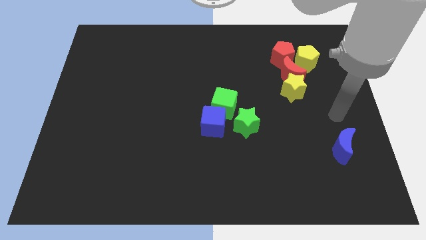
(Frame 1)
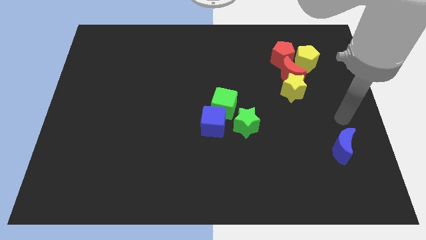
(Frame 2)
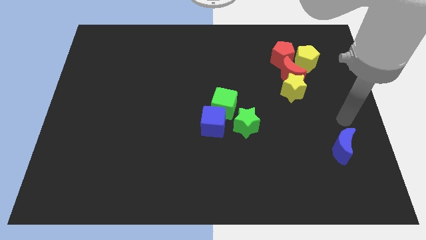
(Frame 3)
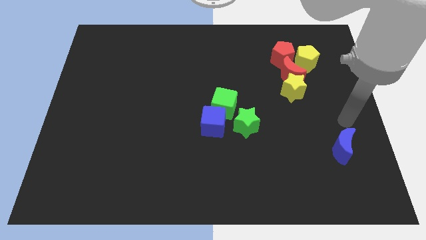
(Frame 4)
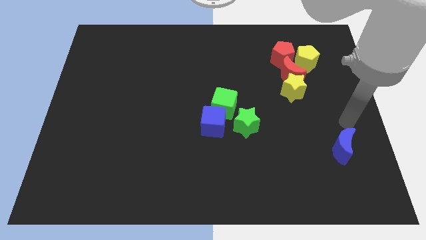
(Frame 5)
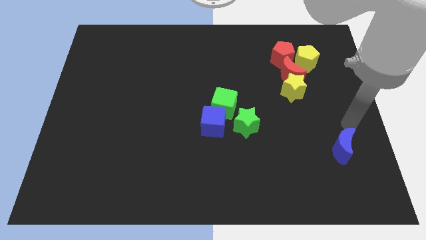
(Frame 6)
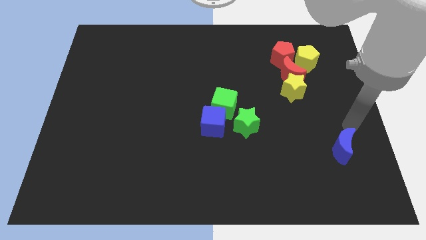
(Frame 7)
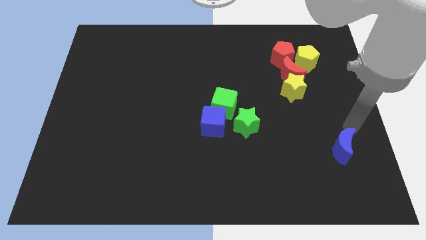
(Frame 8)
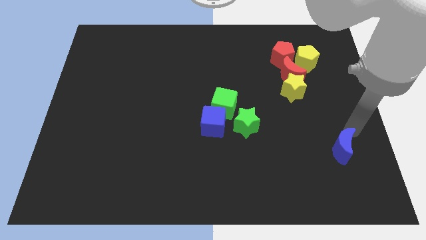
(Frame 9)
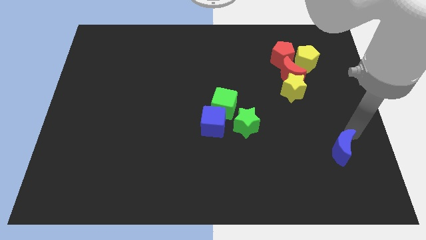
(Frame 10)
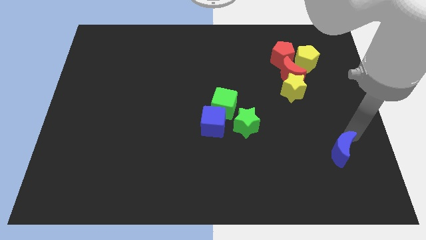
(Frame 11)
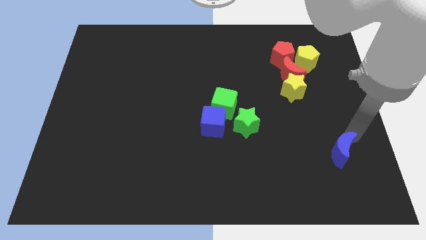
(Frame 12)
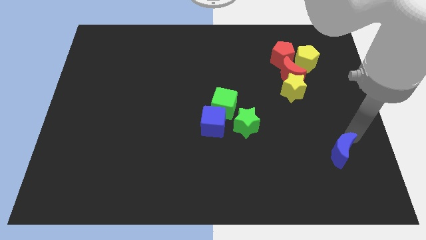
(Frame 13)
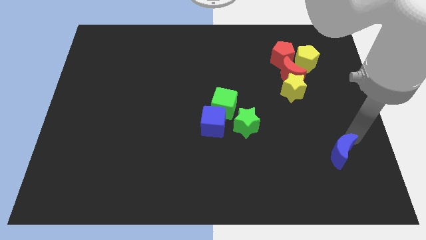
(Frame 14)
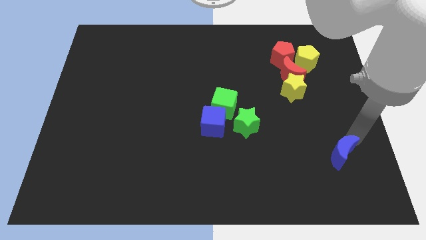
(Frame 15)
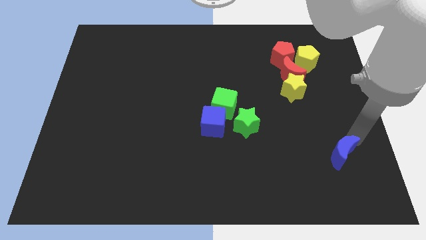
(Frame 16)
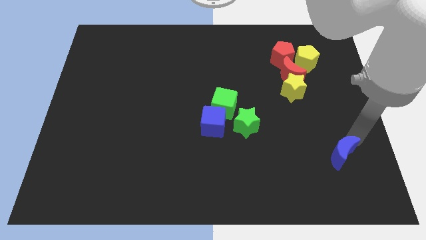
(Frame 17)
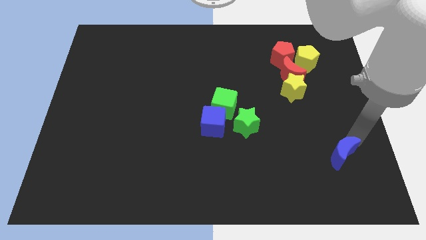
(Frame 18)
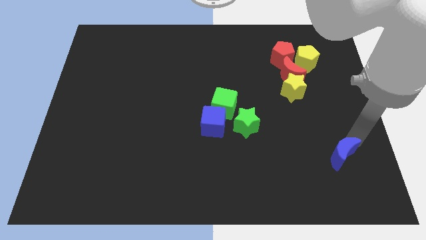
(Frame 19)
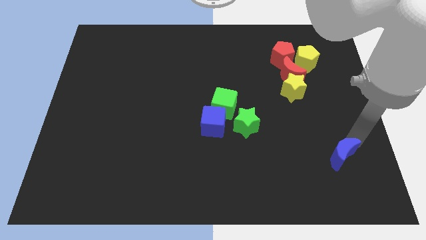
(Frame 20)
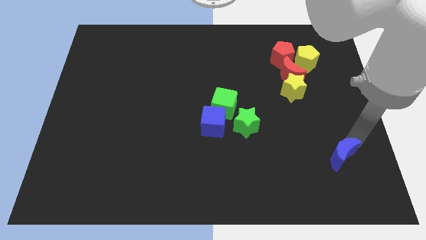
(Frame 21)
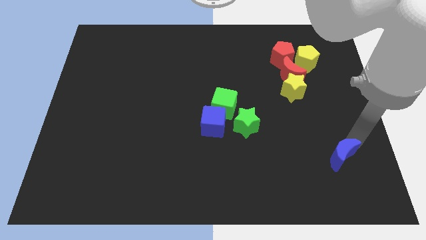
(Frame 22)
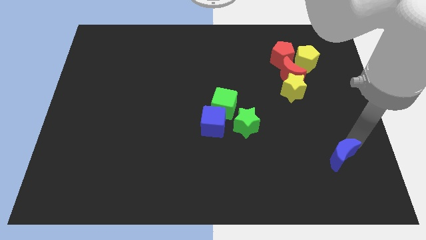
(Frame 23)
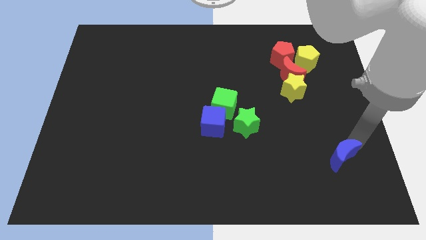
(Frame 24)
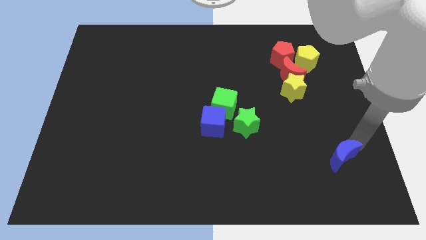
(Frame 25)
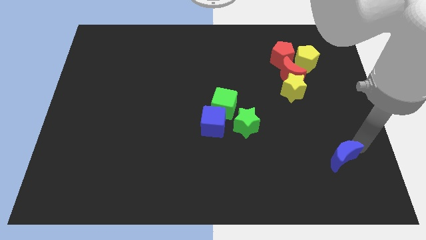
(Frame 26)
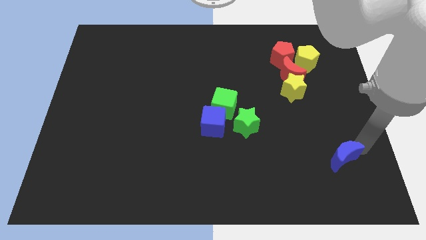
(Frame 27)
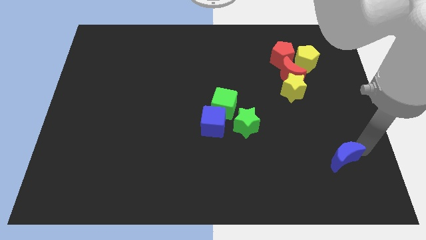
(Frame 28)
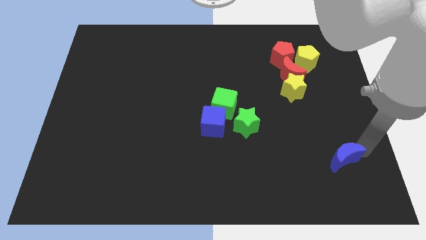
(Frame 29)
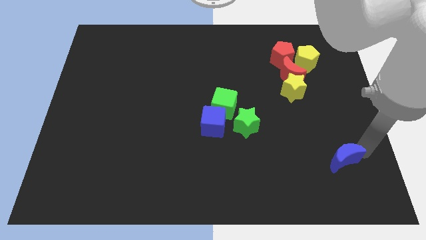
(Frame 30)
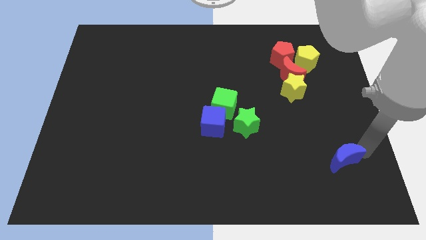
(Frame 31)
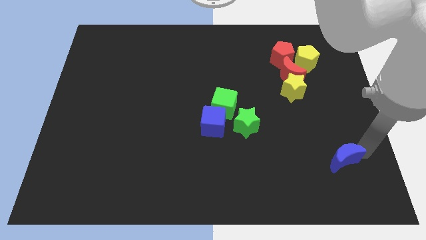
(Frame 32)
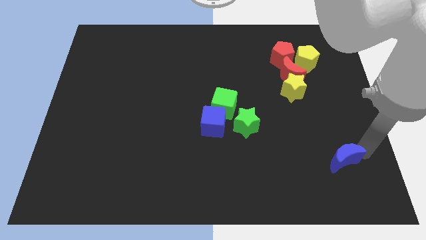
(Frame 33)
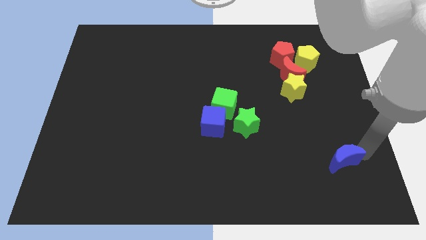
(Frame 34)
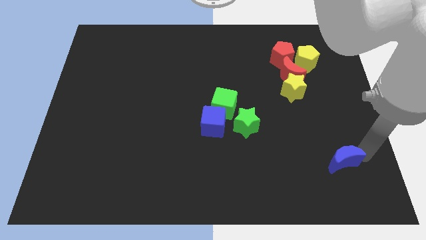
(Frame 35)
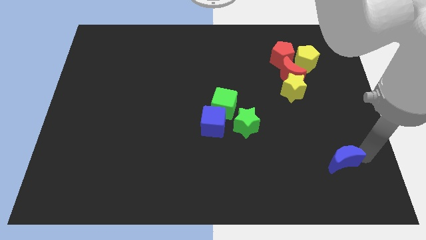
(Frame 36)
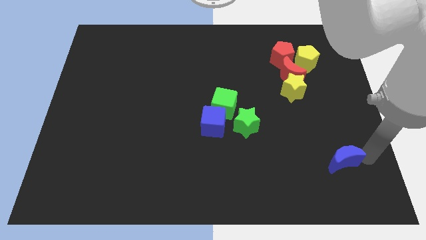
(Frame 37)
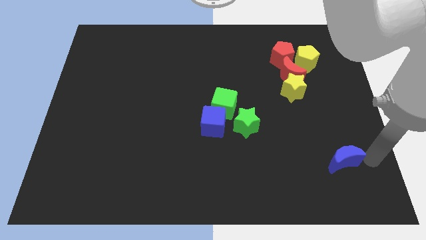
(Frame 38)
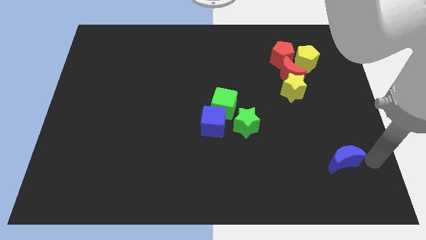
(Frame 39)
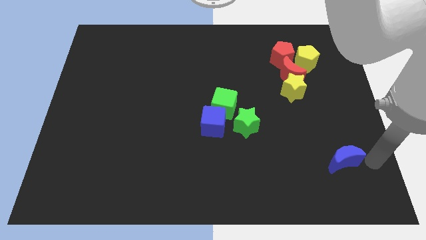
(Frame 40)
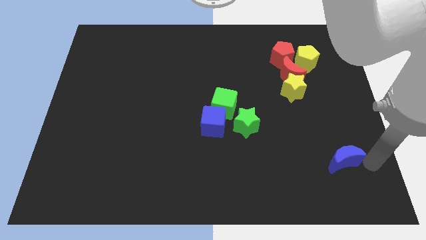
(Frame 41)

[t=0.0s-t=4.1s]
rotate the blue moon

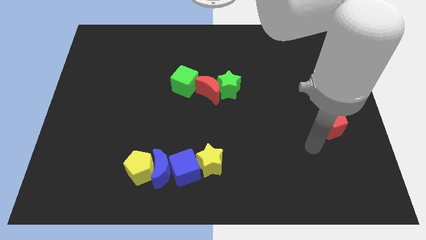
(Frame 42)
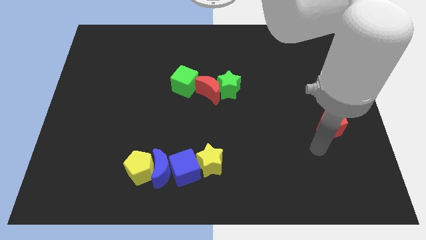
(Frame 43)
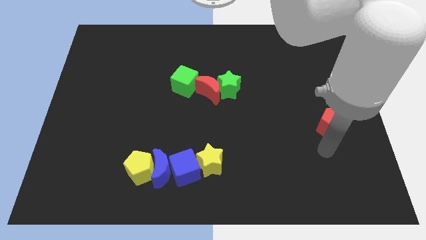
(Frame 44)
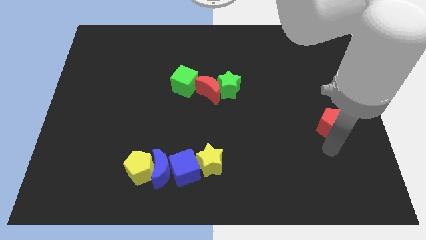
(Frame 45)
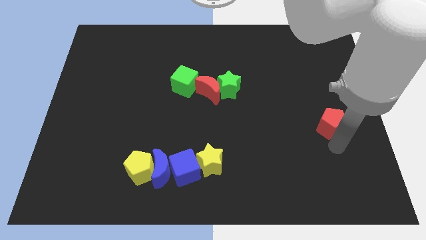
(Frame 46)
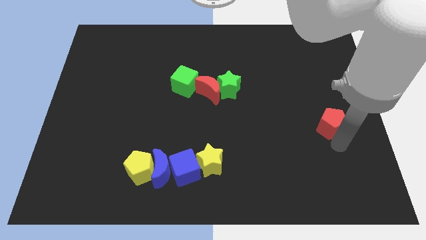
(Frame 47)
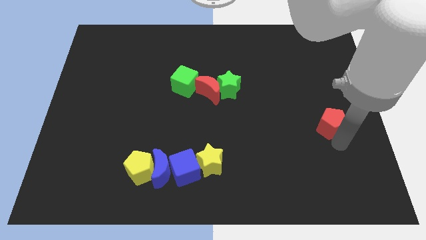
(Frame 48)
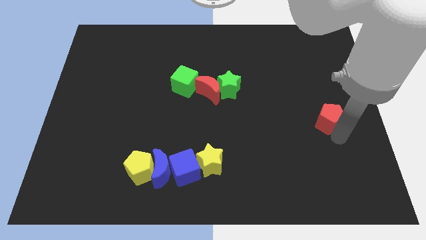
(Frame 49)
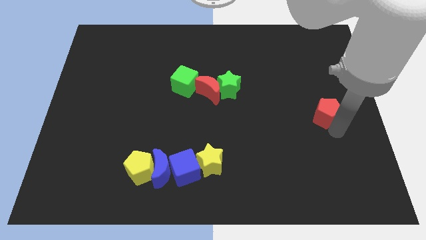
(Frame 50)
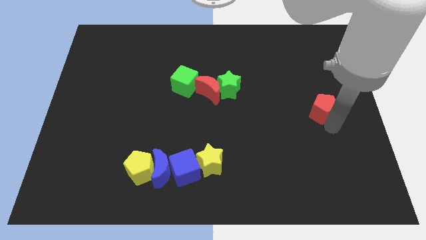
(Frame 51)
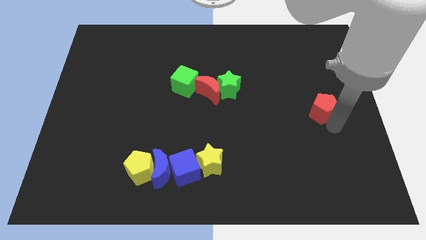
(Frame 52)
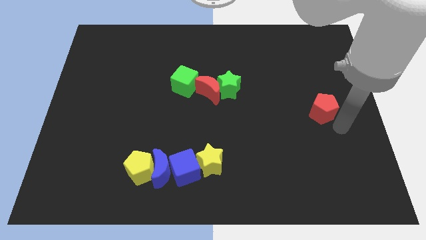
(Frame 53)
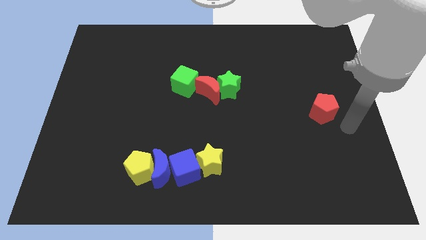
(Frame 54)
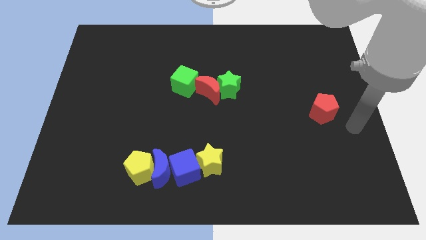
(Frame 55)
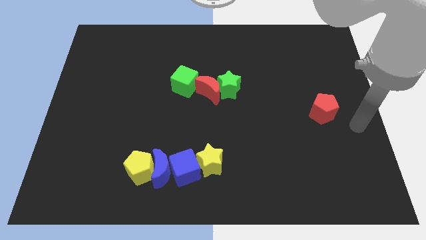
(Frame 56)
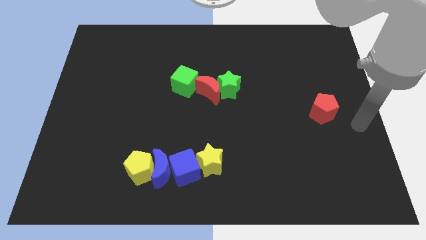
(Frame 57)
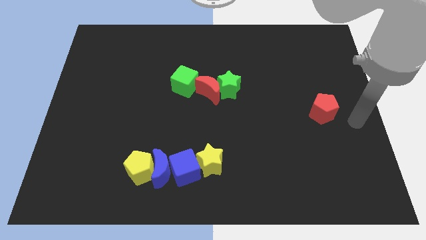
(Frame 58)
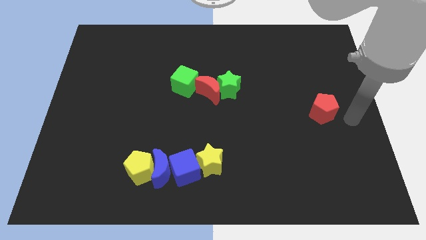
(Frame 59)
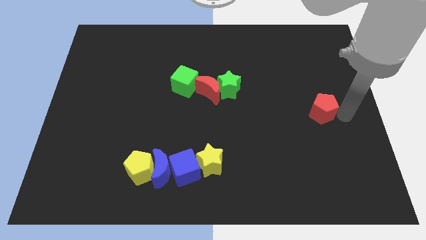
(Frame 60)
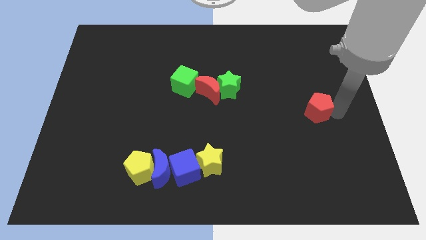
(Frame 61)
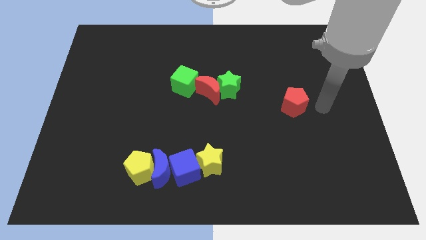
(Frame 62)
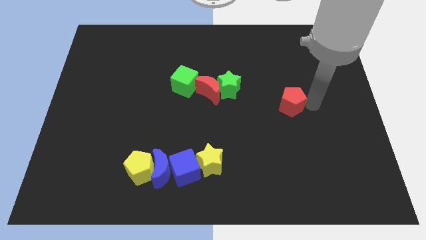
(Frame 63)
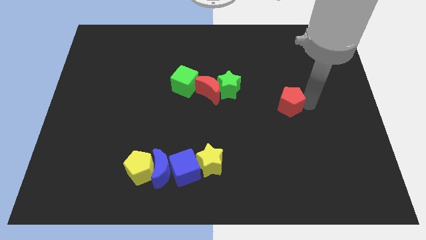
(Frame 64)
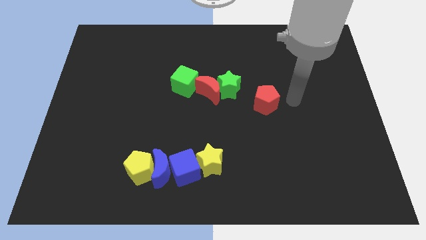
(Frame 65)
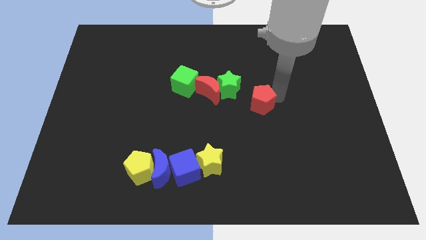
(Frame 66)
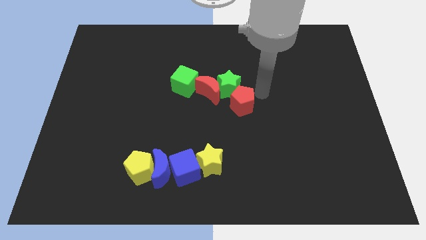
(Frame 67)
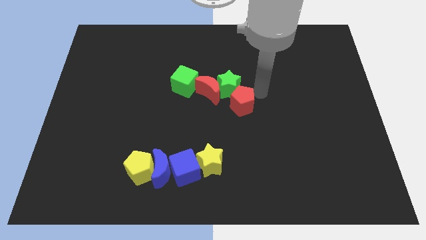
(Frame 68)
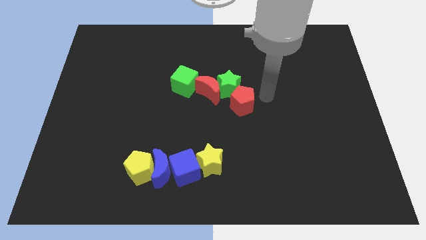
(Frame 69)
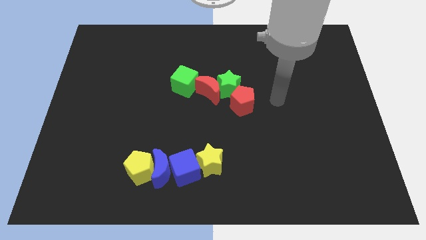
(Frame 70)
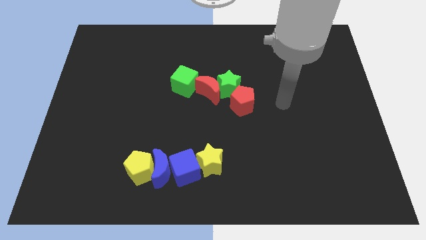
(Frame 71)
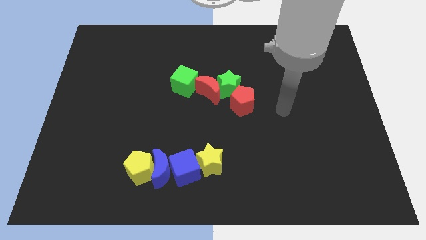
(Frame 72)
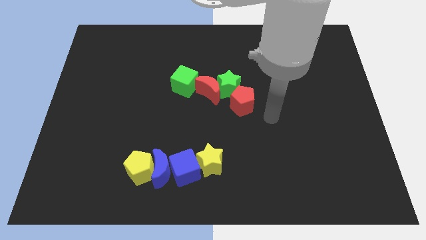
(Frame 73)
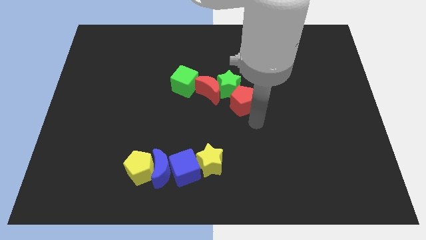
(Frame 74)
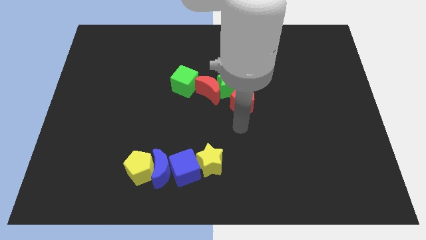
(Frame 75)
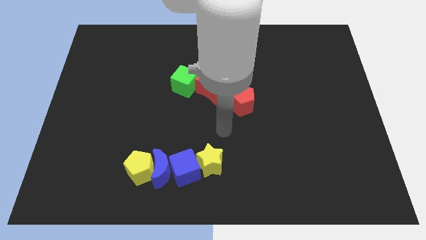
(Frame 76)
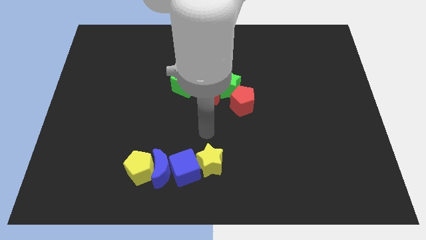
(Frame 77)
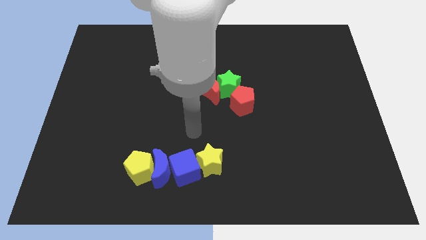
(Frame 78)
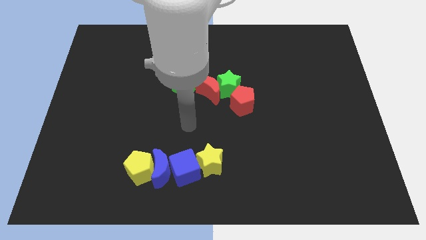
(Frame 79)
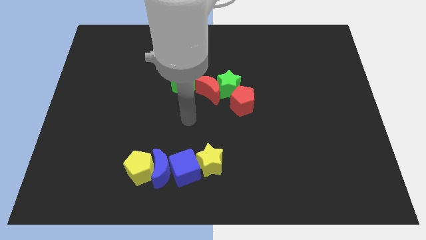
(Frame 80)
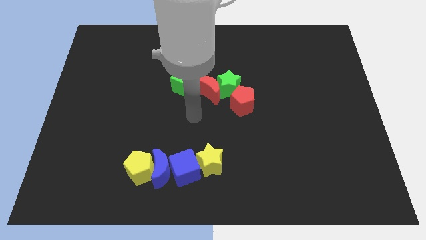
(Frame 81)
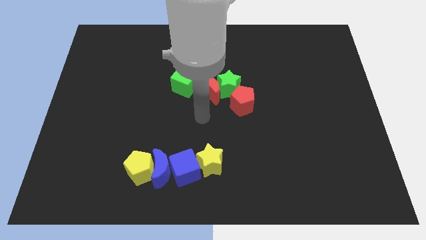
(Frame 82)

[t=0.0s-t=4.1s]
move red pentagon close to the green star

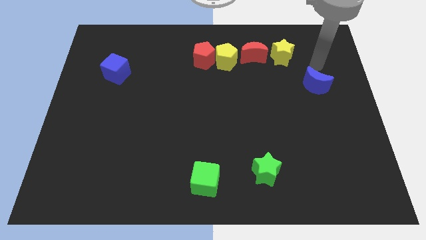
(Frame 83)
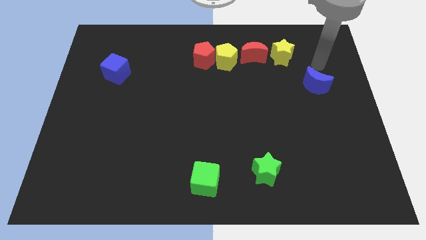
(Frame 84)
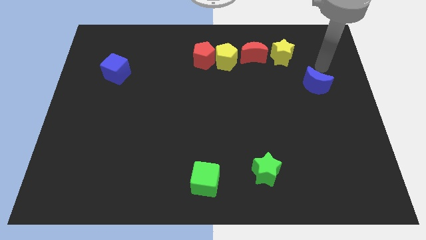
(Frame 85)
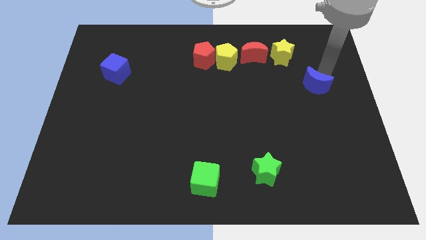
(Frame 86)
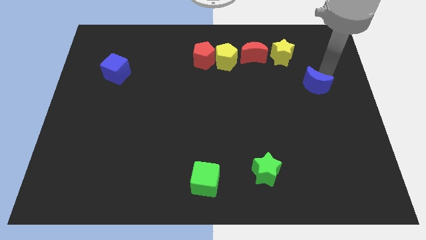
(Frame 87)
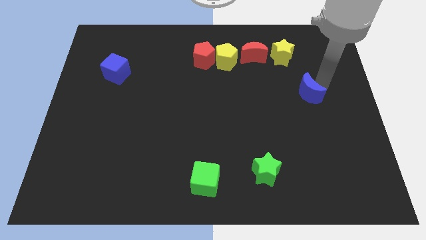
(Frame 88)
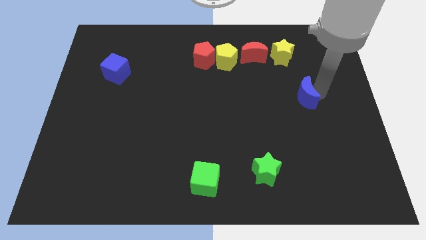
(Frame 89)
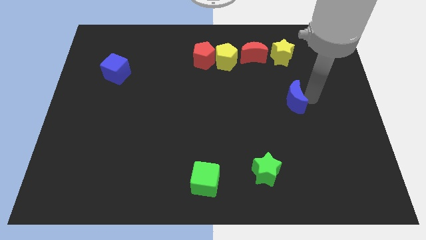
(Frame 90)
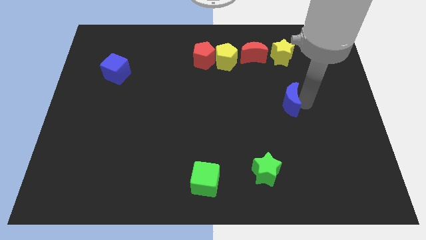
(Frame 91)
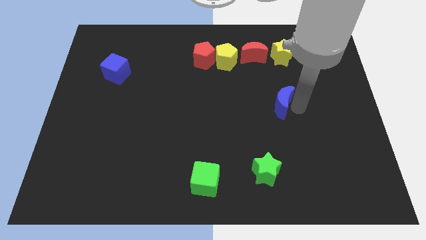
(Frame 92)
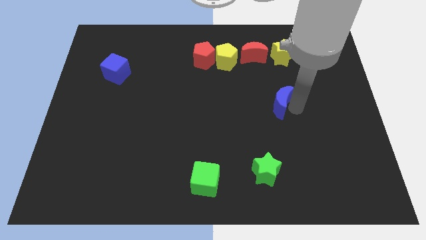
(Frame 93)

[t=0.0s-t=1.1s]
move the blue moon vertically below the yellow star
